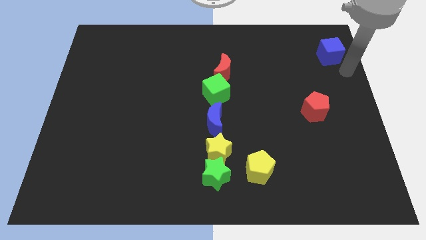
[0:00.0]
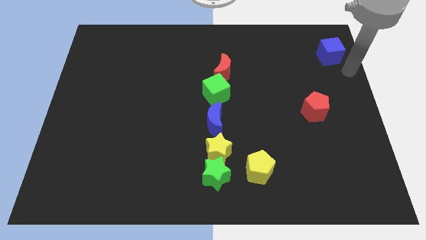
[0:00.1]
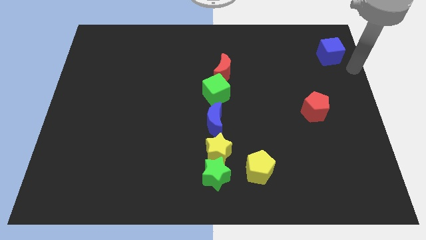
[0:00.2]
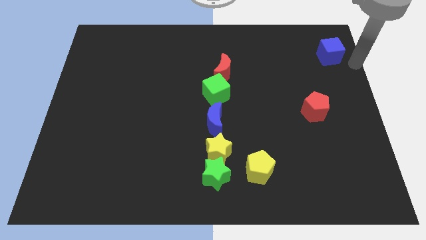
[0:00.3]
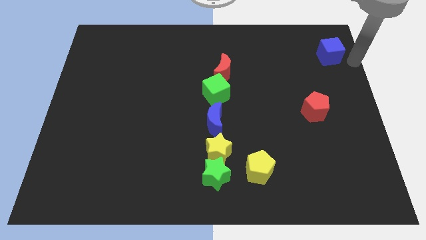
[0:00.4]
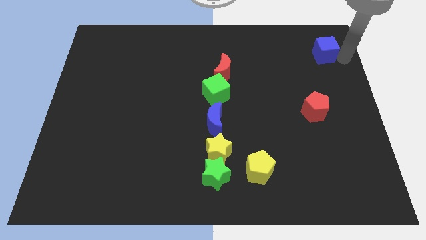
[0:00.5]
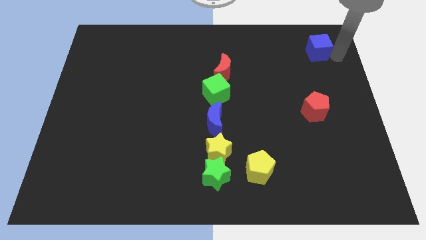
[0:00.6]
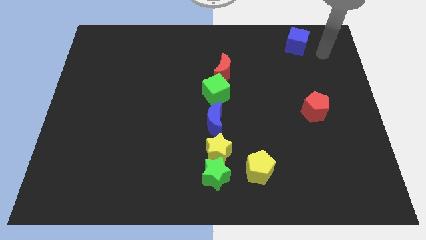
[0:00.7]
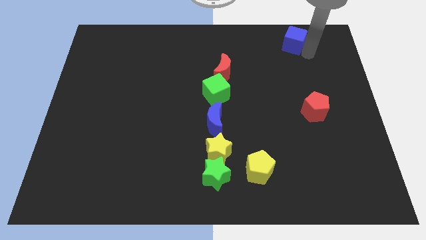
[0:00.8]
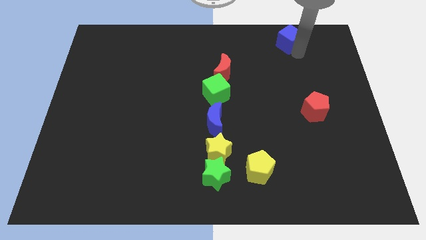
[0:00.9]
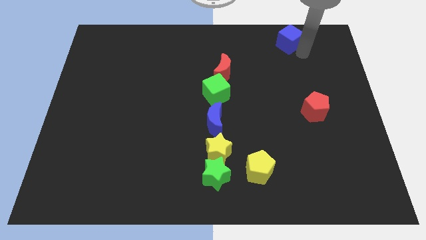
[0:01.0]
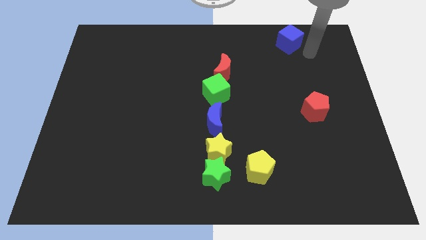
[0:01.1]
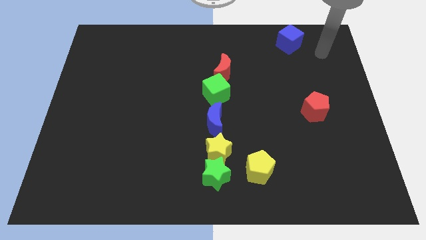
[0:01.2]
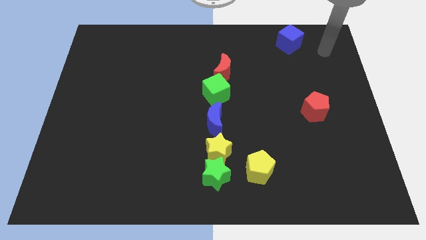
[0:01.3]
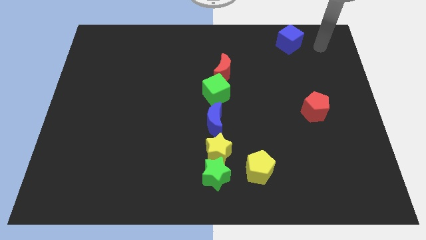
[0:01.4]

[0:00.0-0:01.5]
move the blue cube towards the top center

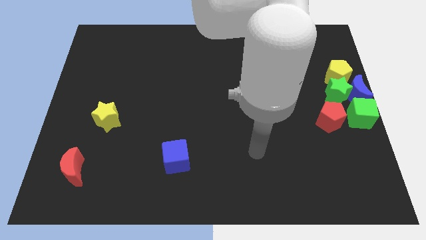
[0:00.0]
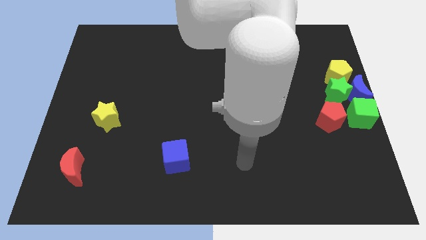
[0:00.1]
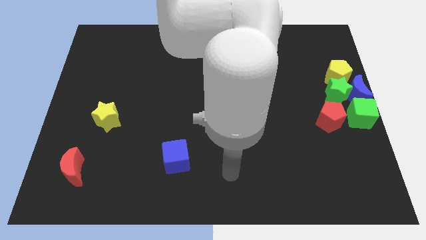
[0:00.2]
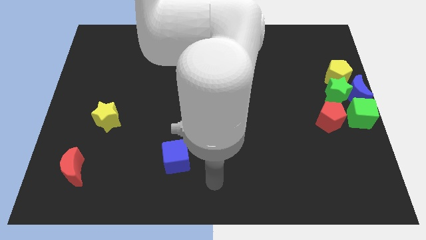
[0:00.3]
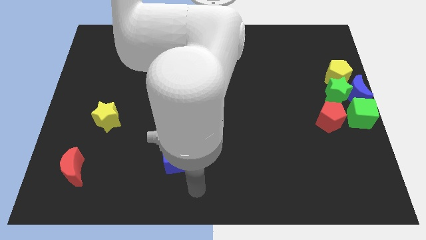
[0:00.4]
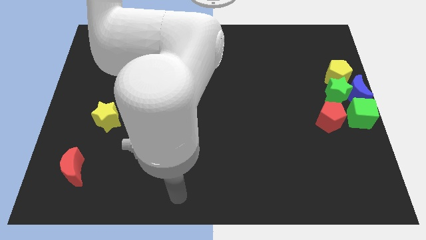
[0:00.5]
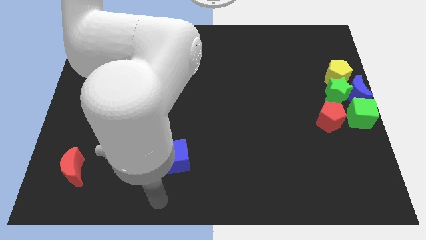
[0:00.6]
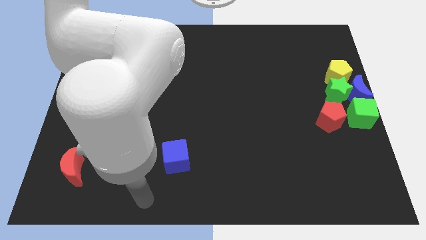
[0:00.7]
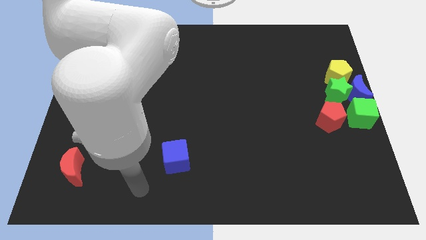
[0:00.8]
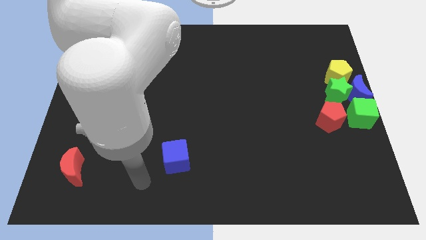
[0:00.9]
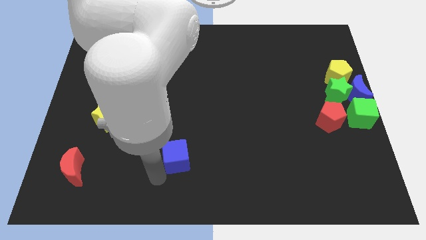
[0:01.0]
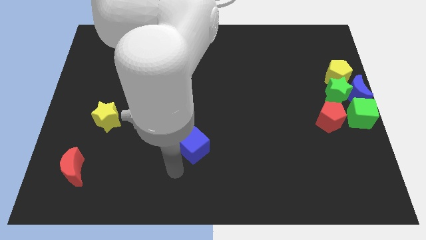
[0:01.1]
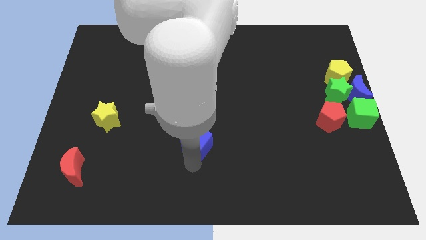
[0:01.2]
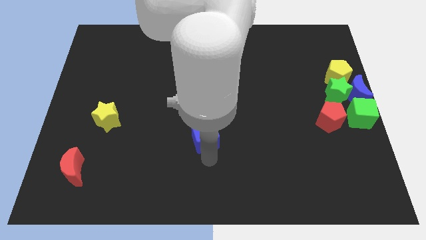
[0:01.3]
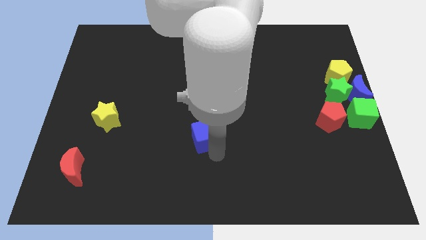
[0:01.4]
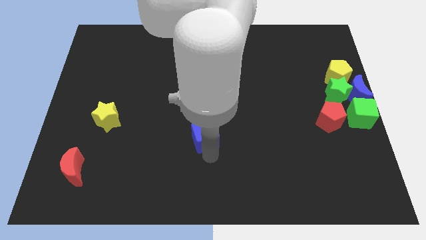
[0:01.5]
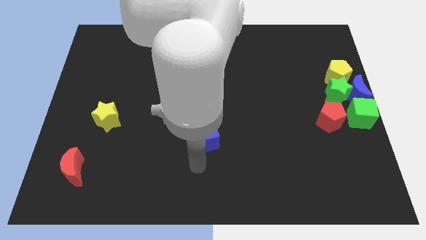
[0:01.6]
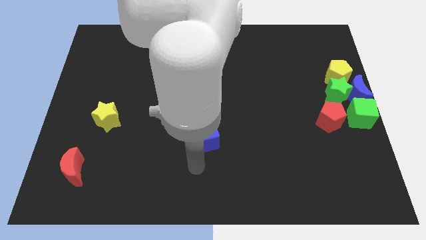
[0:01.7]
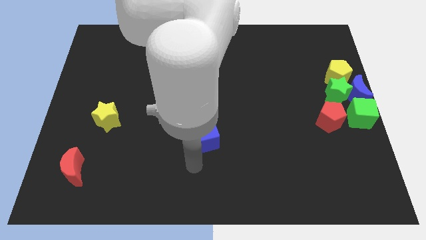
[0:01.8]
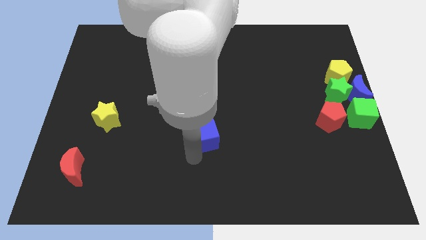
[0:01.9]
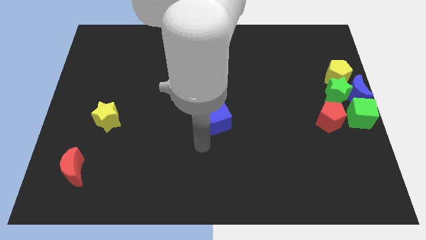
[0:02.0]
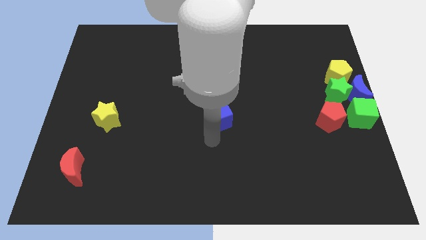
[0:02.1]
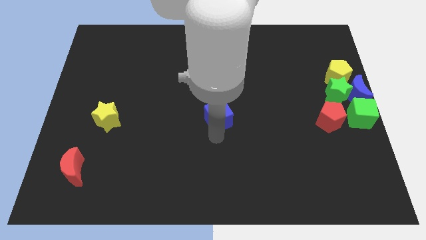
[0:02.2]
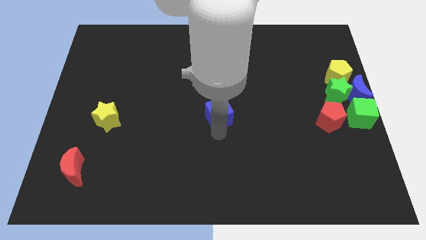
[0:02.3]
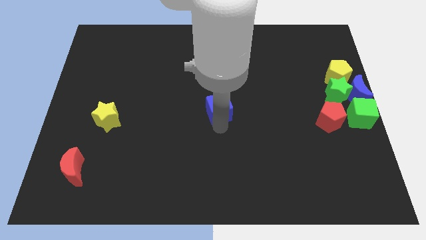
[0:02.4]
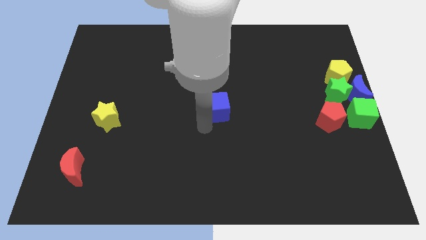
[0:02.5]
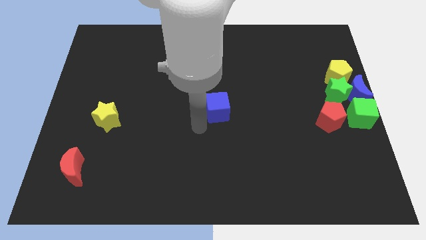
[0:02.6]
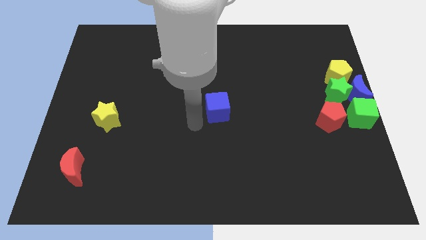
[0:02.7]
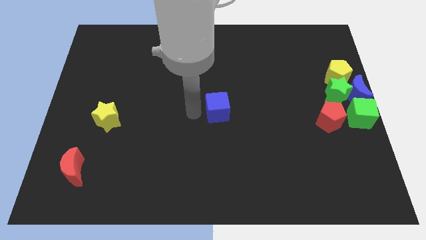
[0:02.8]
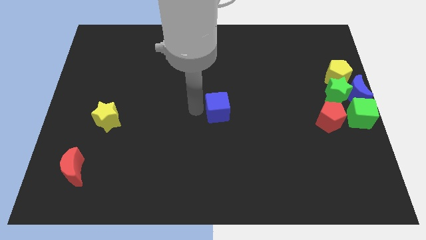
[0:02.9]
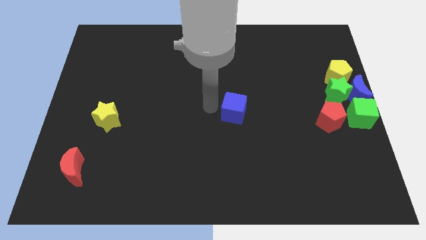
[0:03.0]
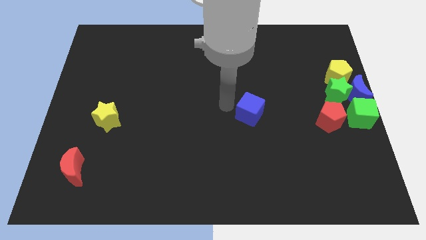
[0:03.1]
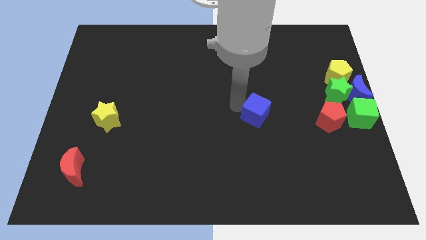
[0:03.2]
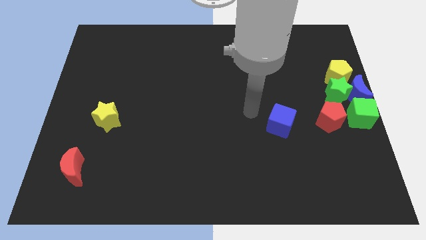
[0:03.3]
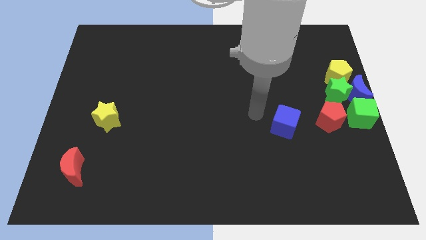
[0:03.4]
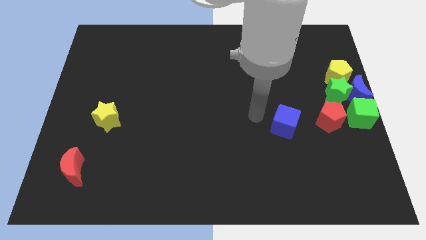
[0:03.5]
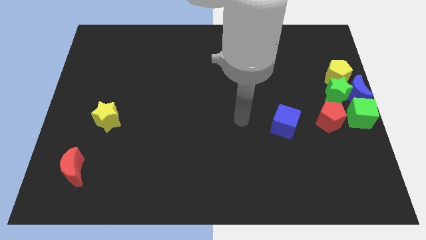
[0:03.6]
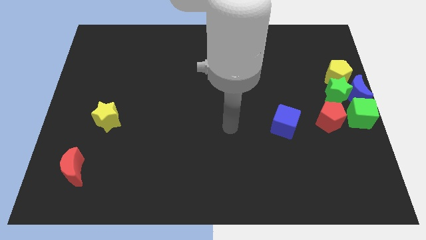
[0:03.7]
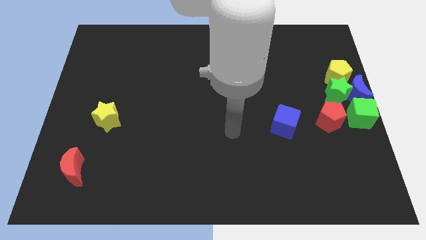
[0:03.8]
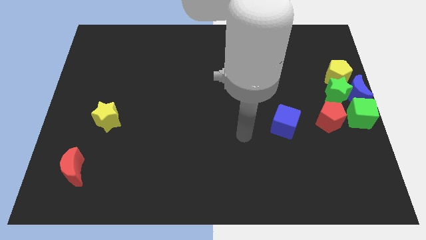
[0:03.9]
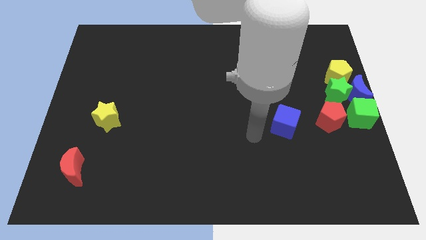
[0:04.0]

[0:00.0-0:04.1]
move the blue cube to the left of the red pentagon

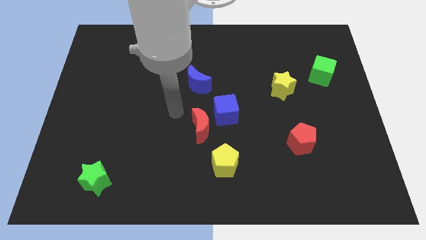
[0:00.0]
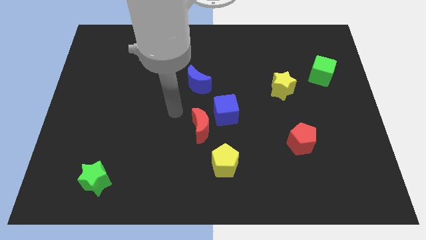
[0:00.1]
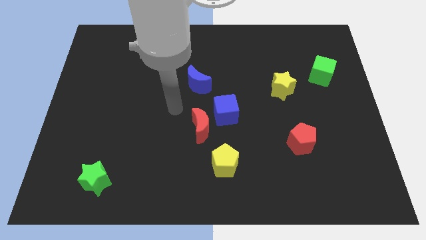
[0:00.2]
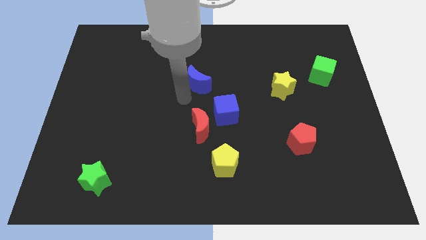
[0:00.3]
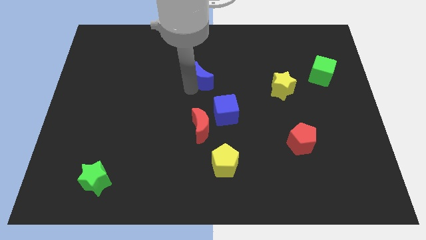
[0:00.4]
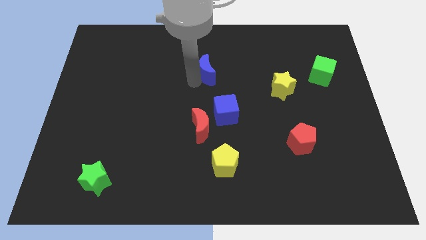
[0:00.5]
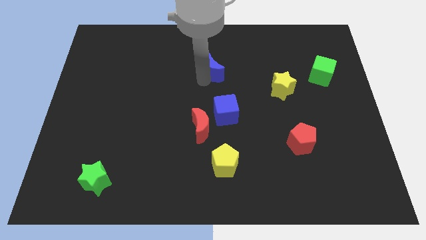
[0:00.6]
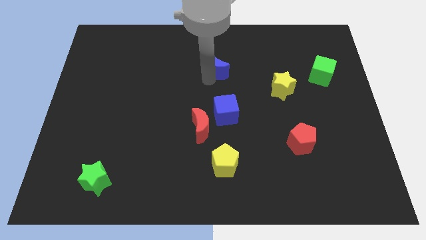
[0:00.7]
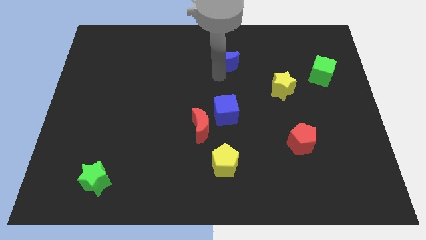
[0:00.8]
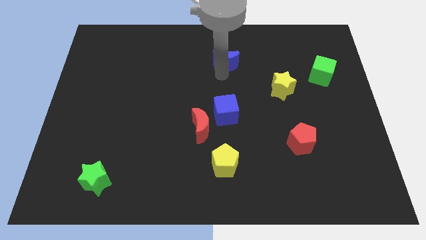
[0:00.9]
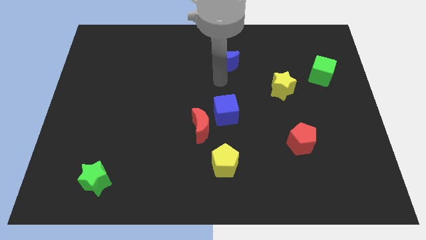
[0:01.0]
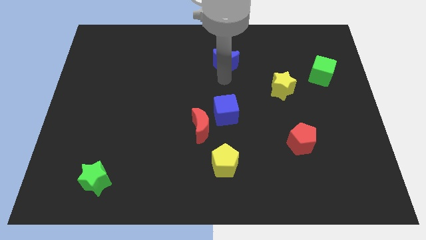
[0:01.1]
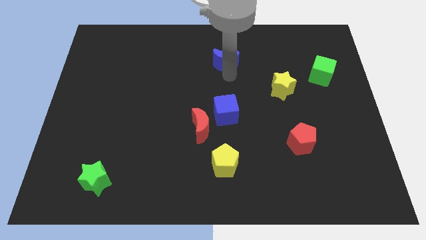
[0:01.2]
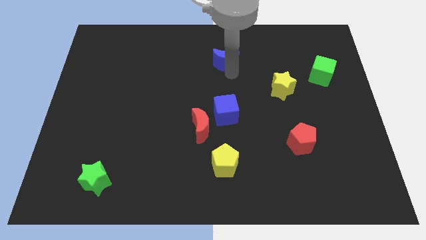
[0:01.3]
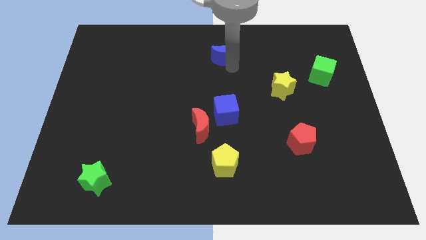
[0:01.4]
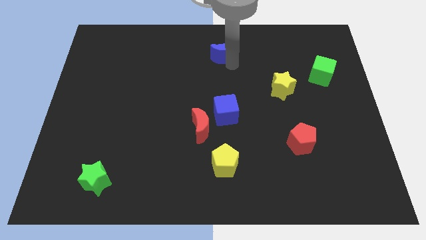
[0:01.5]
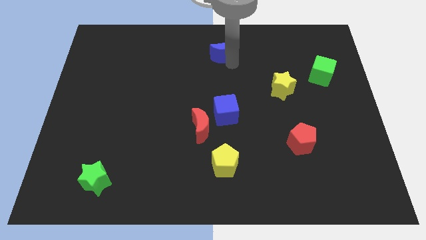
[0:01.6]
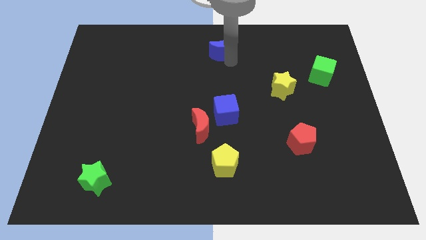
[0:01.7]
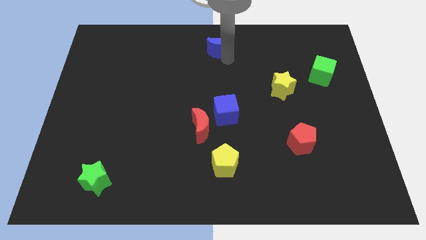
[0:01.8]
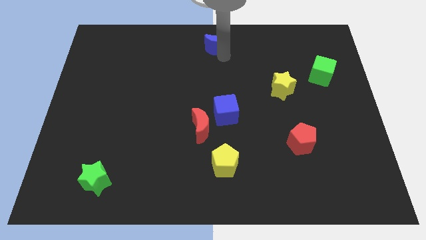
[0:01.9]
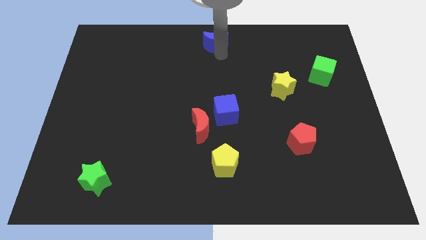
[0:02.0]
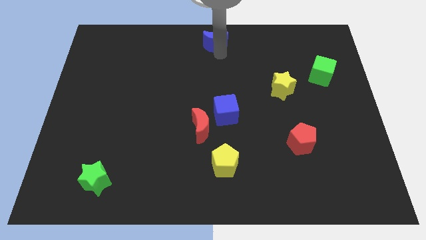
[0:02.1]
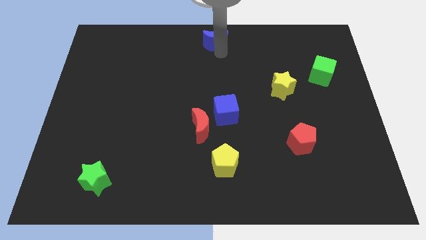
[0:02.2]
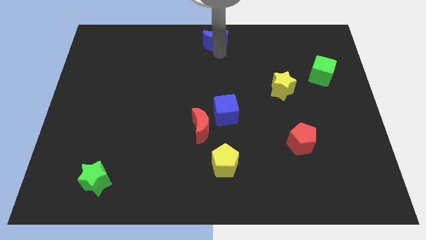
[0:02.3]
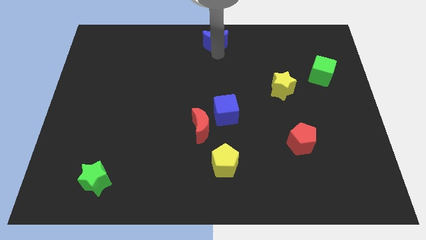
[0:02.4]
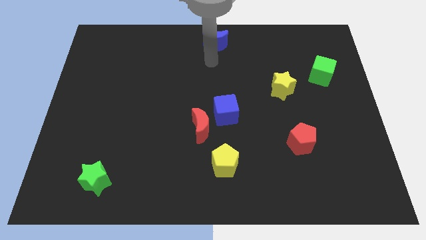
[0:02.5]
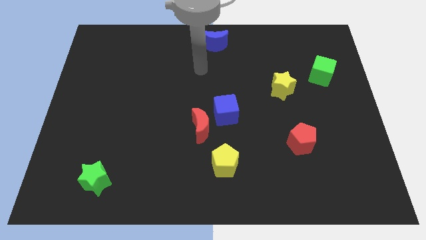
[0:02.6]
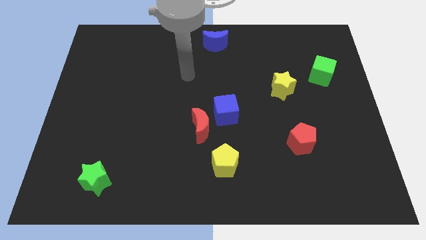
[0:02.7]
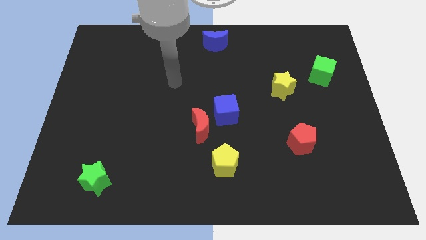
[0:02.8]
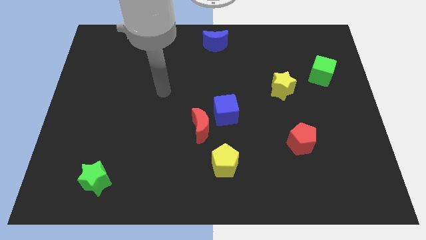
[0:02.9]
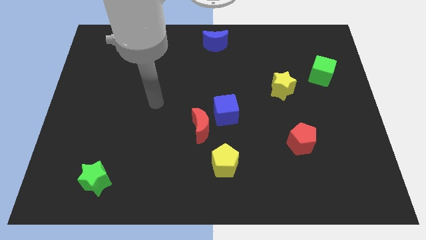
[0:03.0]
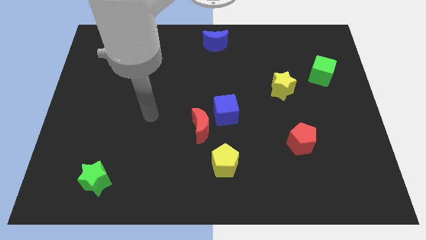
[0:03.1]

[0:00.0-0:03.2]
push the blue crescent towards the top center of the board

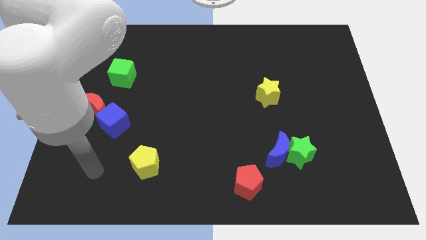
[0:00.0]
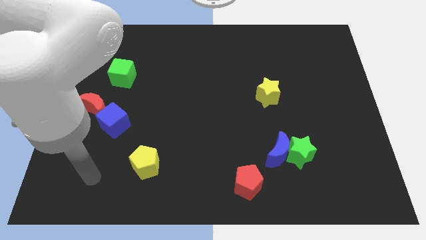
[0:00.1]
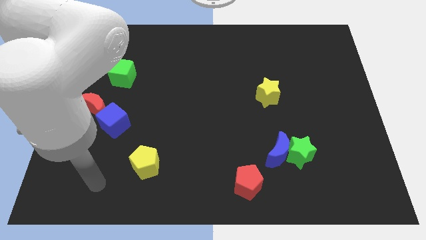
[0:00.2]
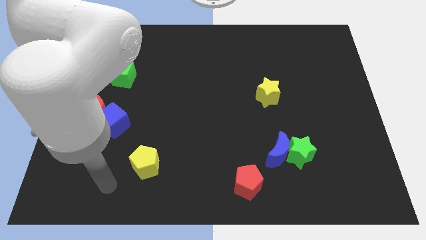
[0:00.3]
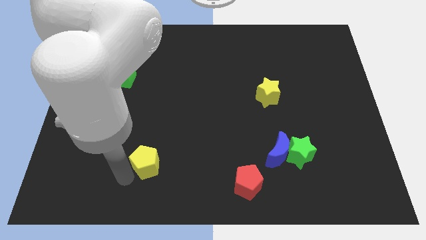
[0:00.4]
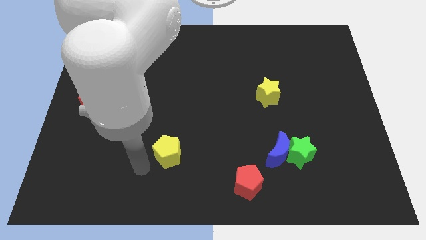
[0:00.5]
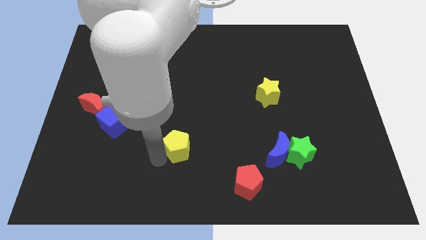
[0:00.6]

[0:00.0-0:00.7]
place the yellow pentagon in between the blue cube and red pentagon
